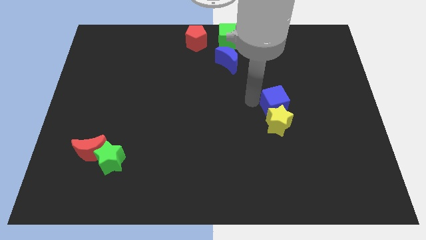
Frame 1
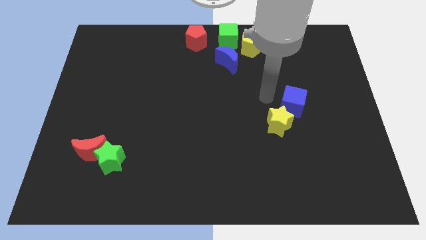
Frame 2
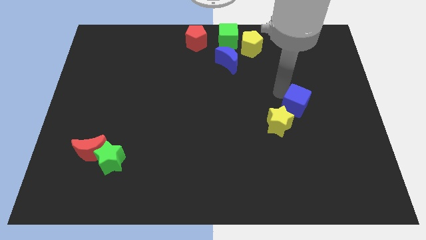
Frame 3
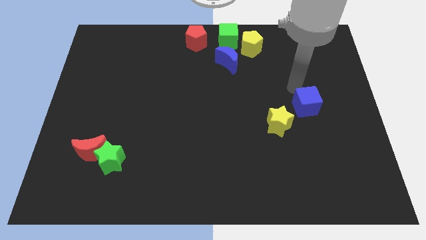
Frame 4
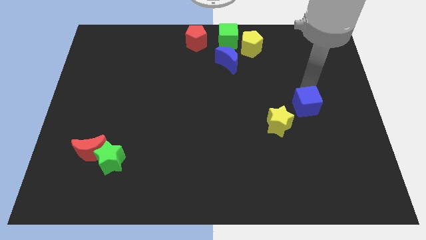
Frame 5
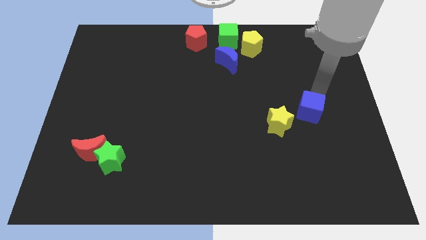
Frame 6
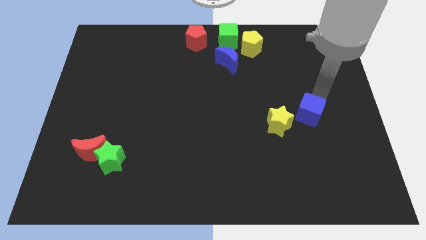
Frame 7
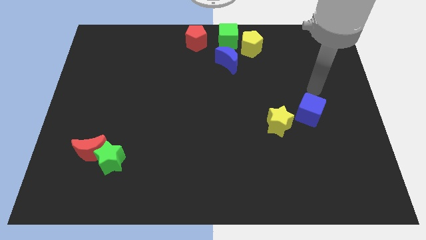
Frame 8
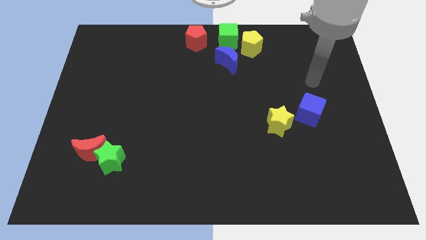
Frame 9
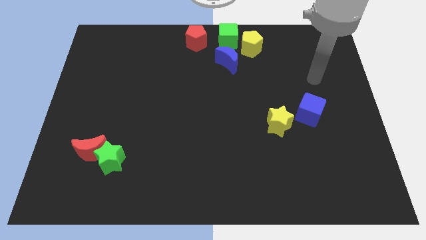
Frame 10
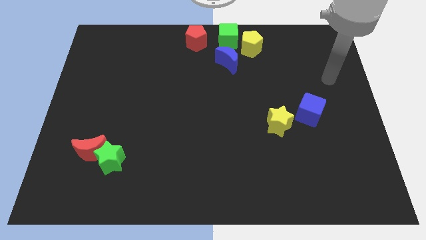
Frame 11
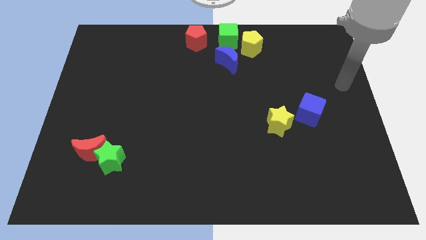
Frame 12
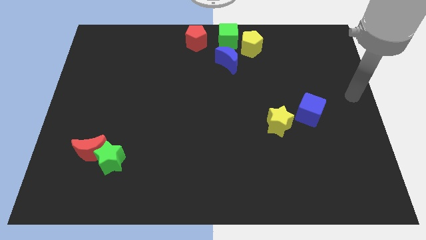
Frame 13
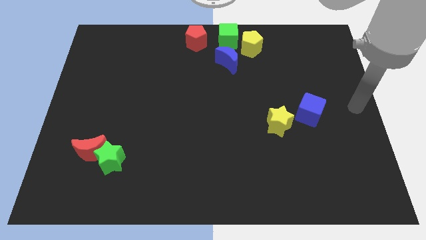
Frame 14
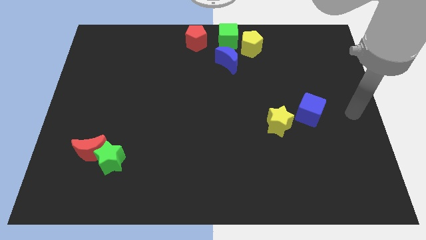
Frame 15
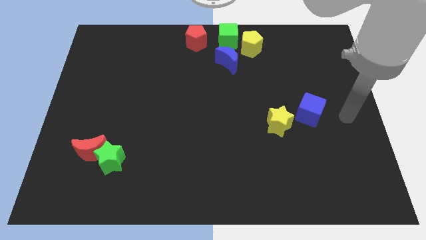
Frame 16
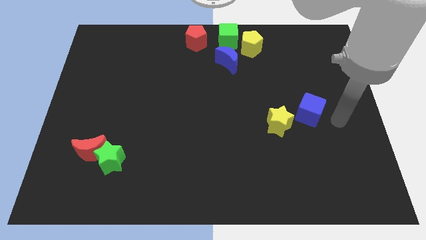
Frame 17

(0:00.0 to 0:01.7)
move the blue cube diagonally top right to the yellow star

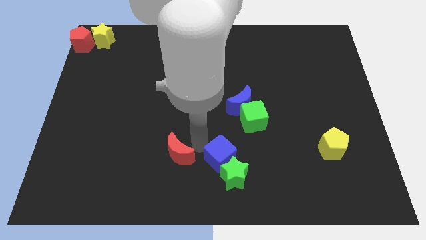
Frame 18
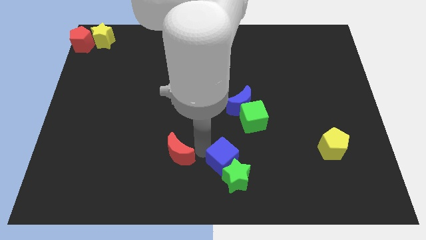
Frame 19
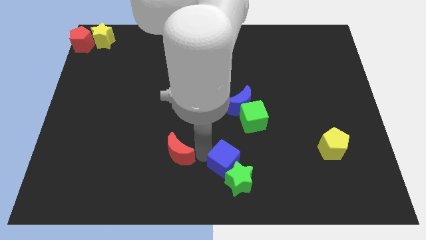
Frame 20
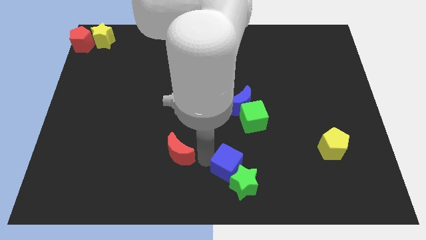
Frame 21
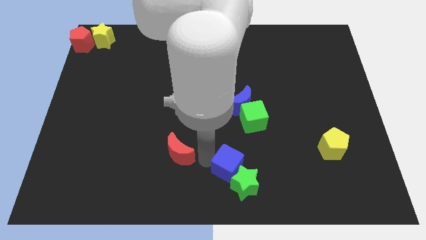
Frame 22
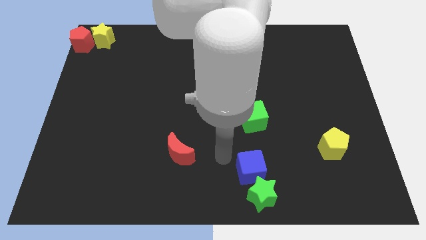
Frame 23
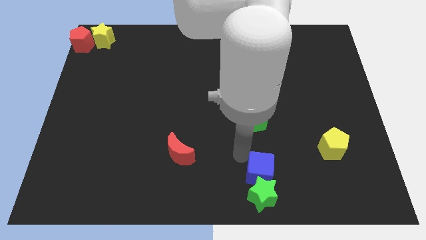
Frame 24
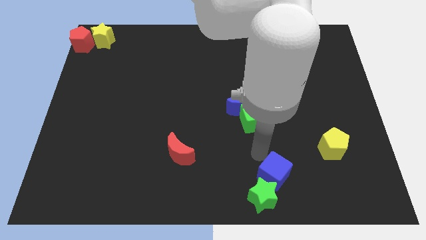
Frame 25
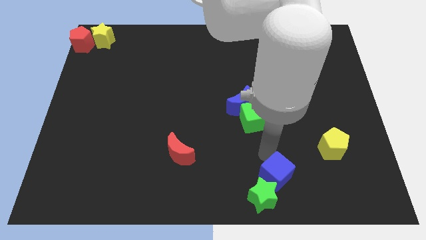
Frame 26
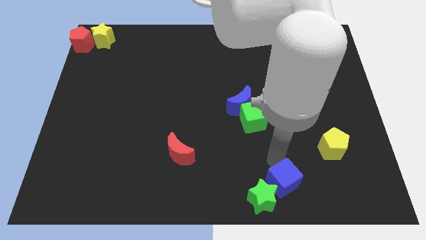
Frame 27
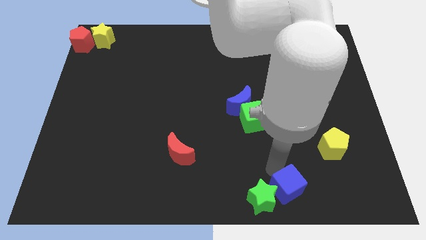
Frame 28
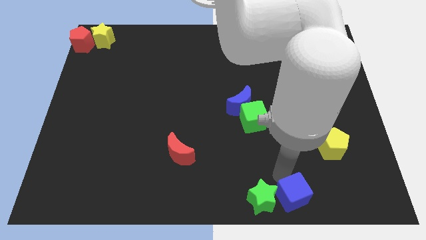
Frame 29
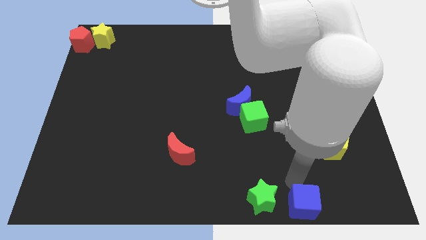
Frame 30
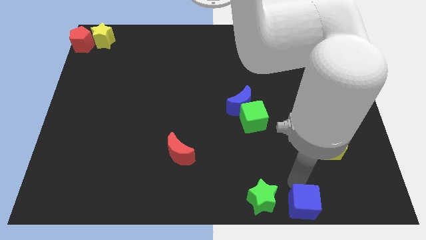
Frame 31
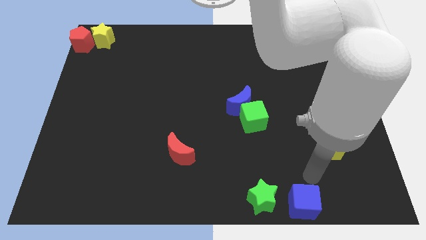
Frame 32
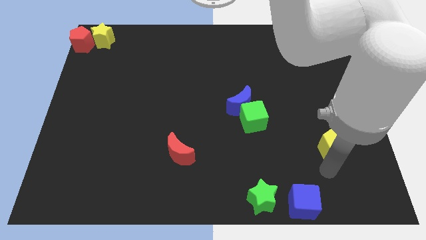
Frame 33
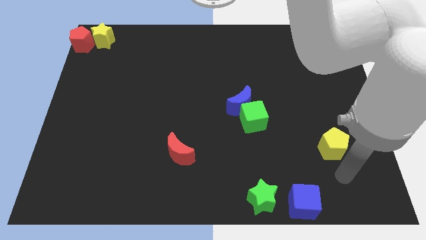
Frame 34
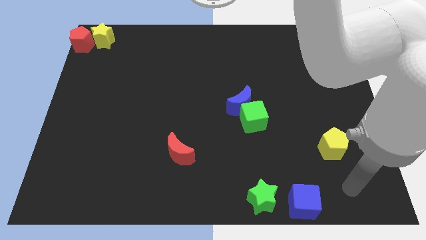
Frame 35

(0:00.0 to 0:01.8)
slide the blue cube and the green star to the bottom of the board

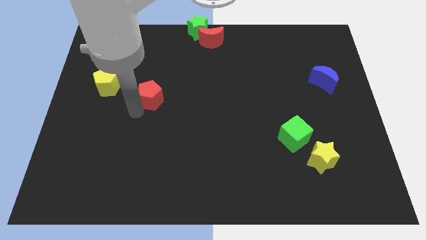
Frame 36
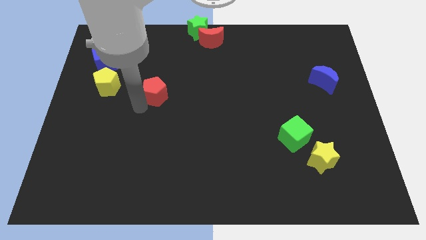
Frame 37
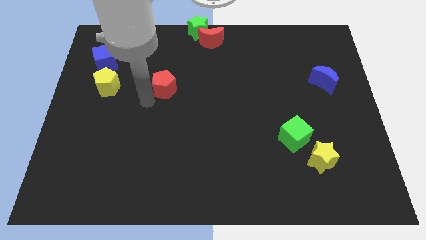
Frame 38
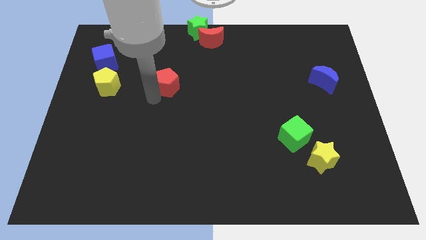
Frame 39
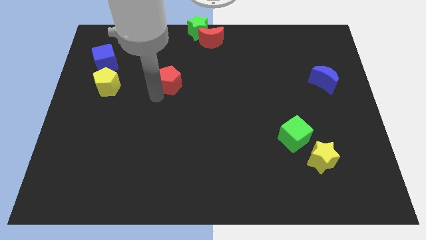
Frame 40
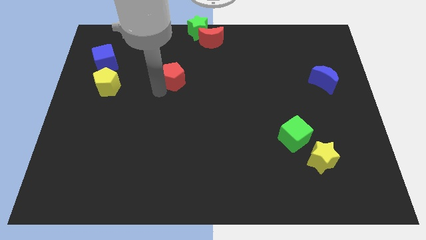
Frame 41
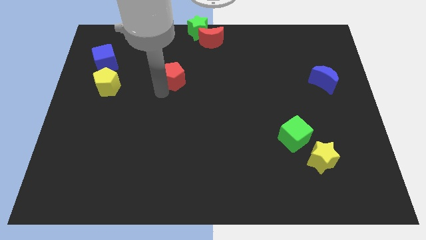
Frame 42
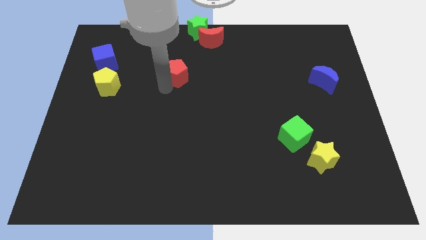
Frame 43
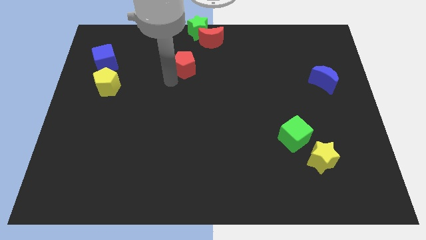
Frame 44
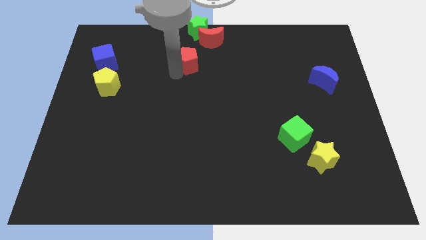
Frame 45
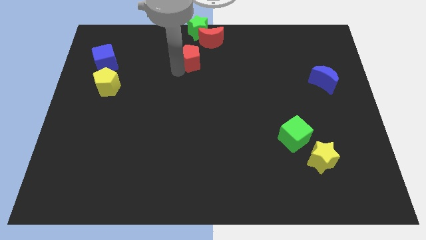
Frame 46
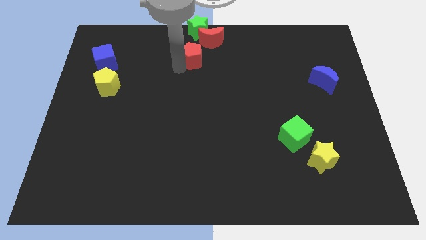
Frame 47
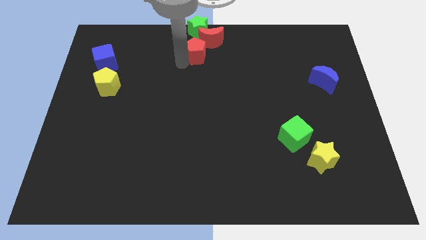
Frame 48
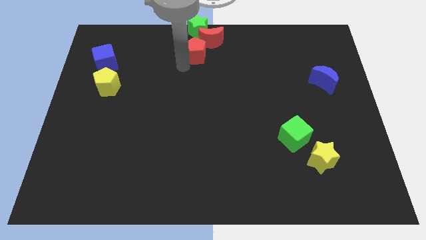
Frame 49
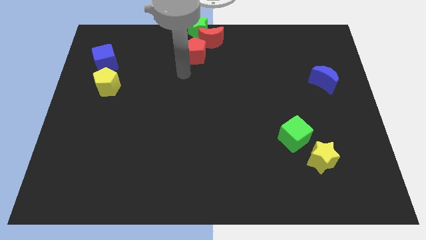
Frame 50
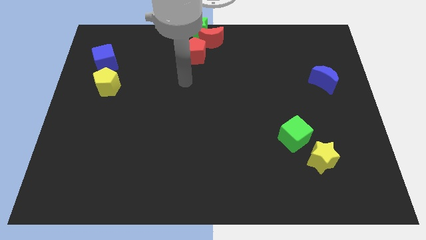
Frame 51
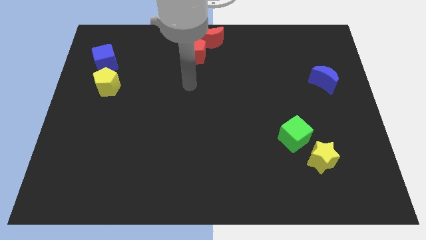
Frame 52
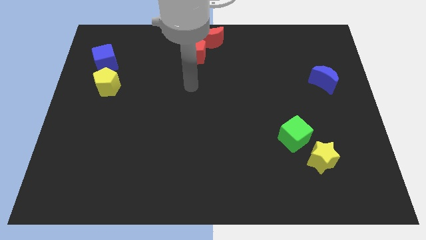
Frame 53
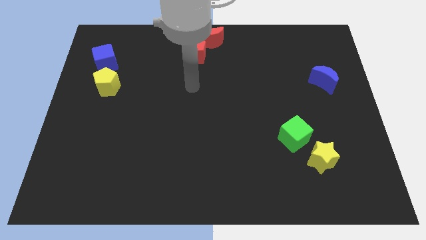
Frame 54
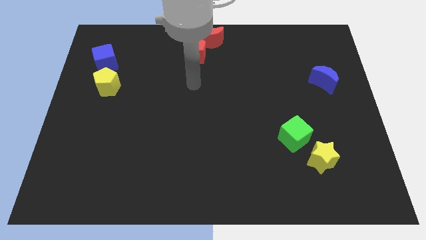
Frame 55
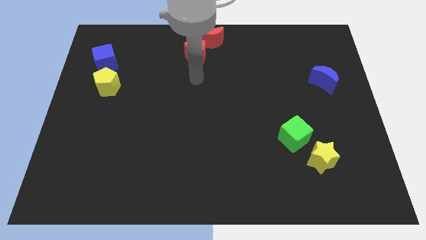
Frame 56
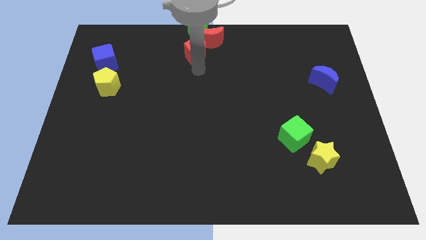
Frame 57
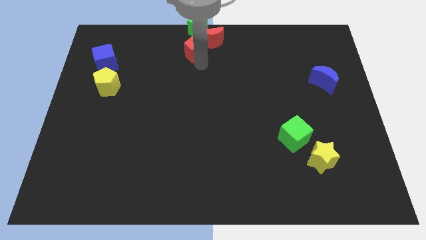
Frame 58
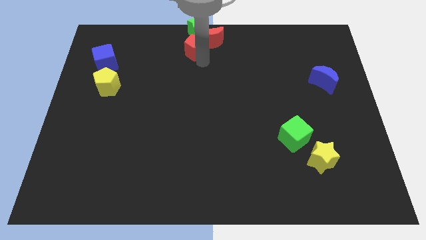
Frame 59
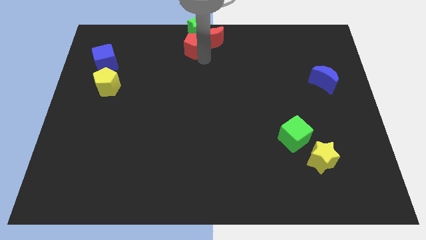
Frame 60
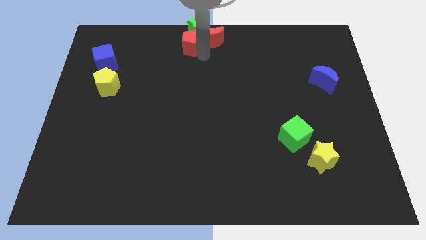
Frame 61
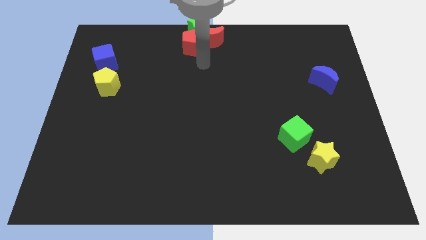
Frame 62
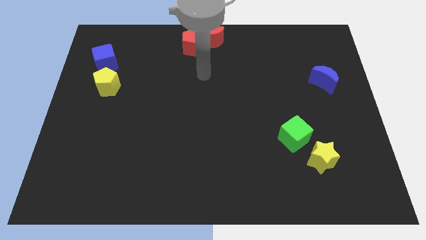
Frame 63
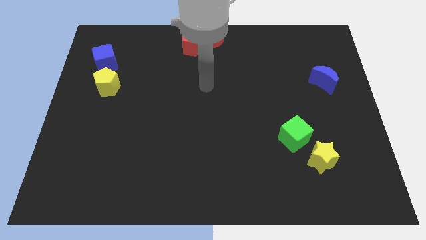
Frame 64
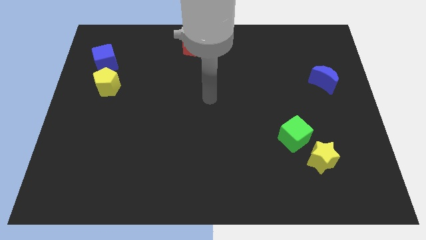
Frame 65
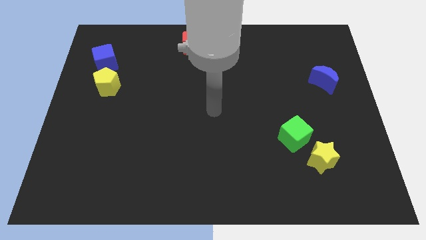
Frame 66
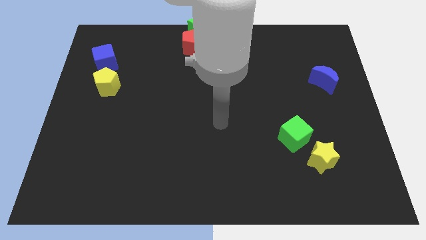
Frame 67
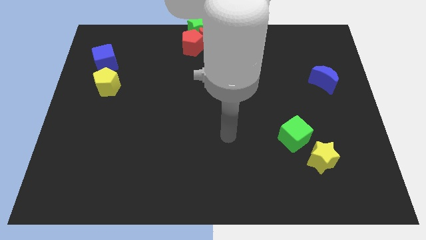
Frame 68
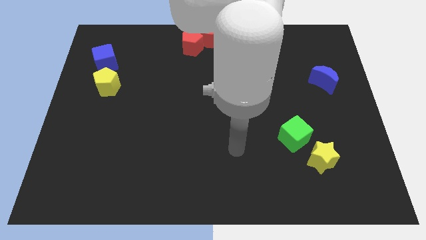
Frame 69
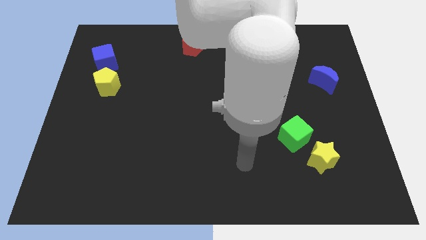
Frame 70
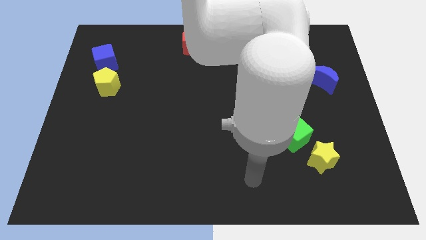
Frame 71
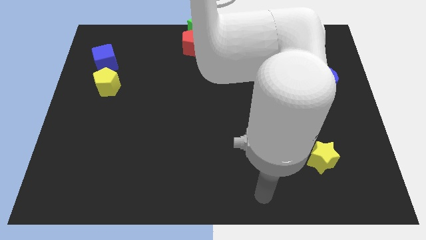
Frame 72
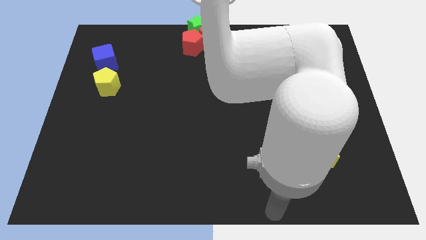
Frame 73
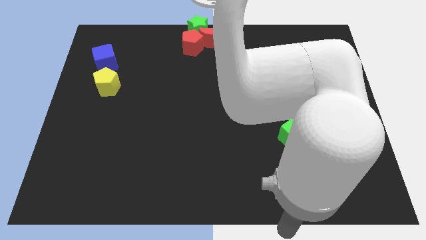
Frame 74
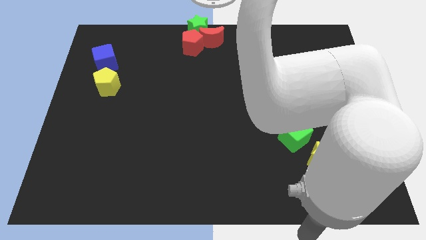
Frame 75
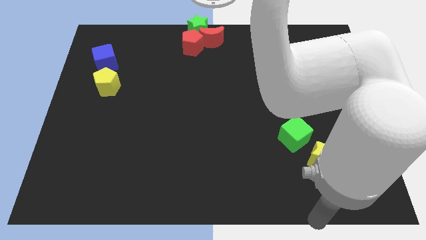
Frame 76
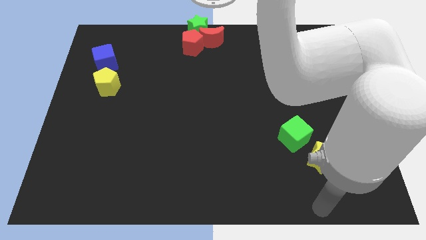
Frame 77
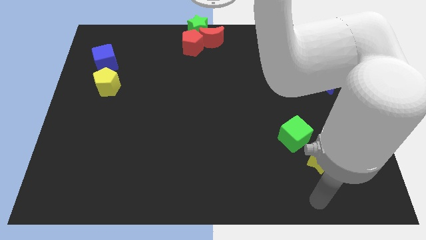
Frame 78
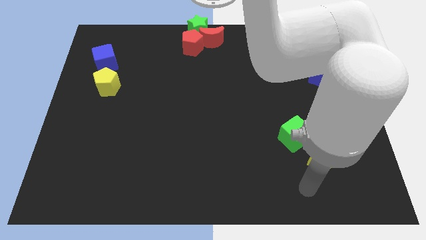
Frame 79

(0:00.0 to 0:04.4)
move red pentagon left beside the red moon

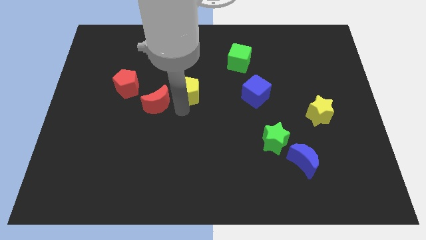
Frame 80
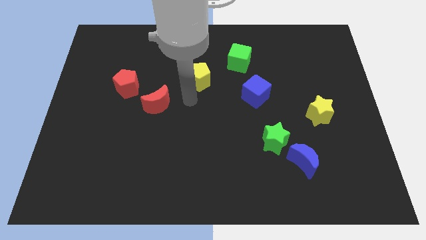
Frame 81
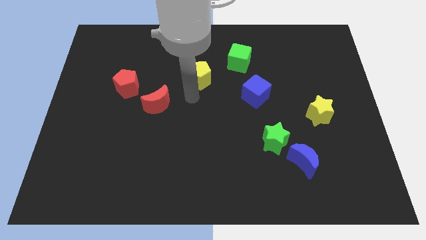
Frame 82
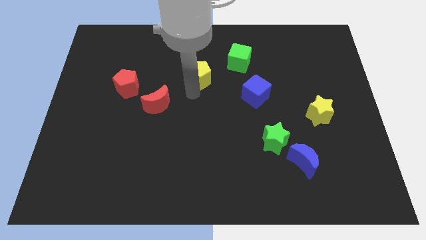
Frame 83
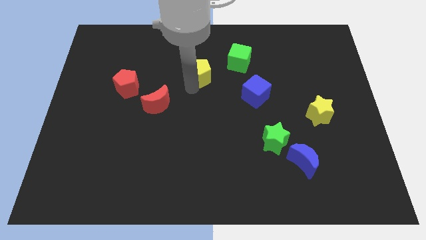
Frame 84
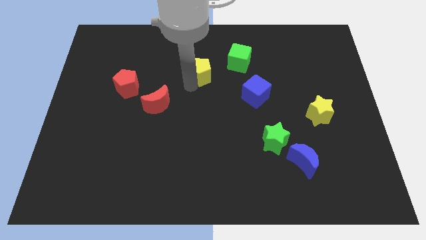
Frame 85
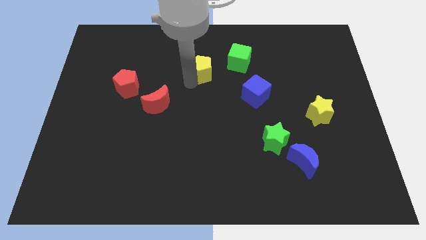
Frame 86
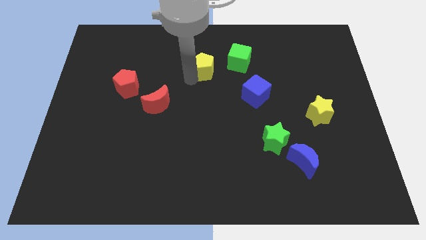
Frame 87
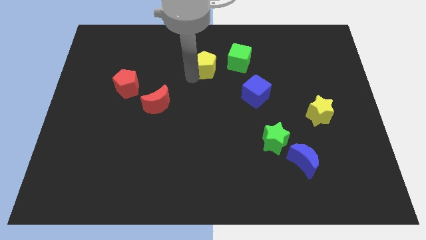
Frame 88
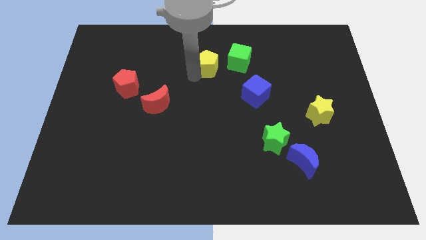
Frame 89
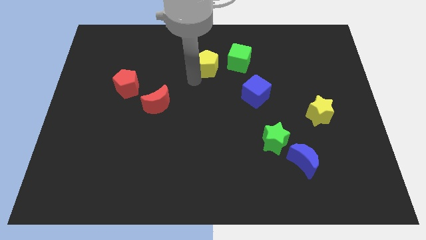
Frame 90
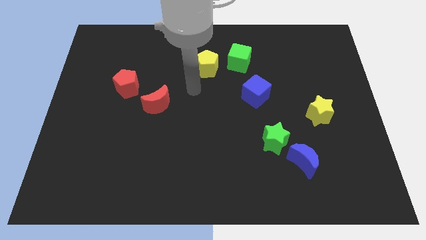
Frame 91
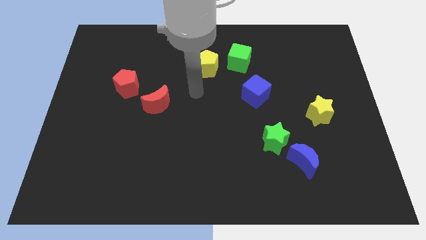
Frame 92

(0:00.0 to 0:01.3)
move the yellow pentagon to the left of the green cube
